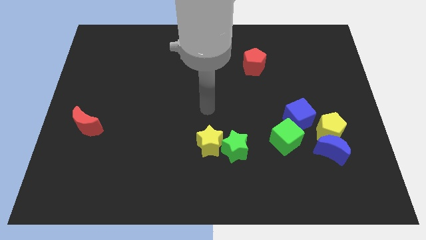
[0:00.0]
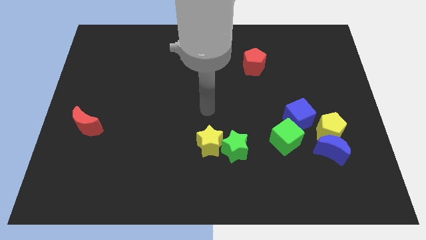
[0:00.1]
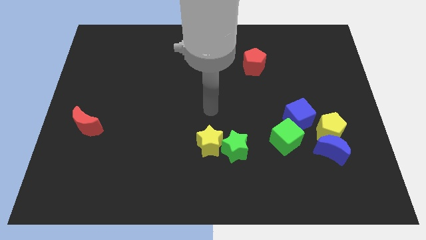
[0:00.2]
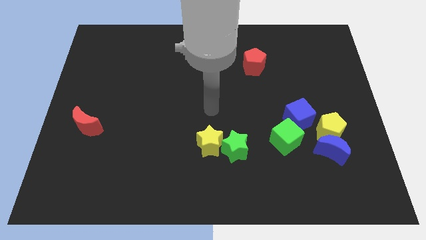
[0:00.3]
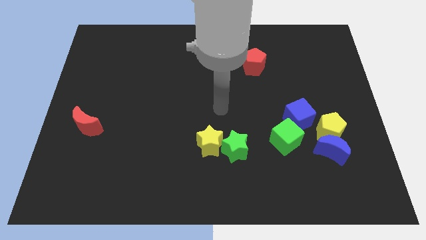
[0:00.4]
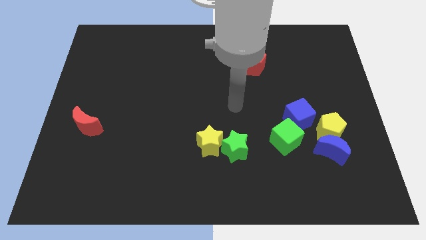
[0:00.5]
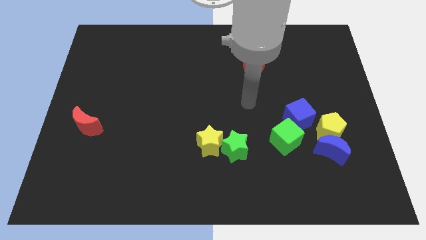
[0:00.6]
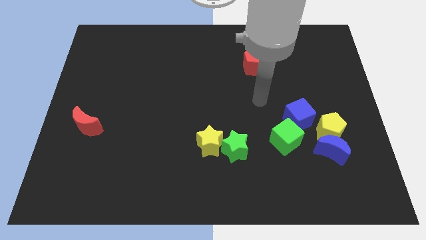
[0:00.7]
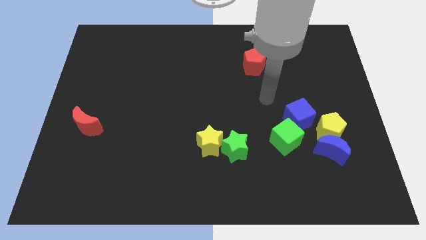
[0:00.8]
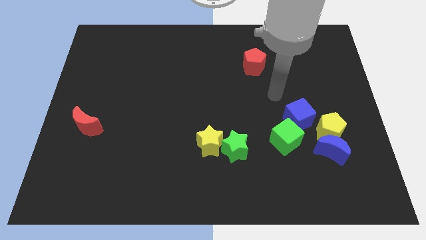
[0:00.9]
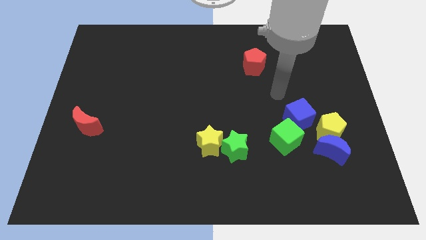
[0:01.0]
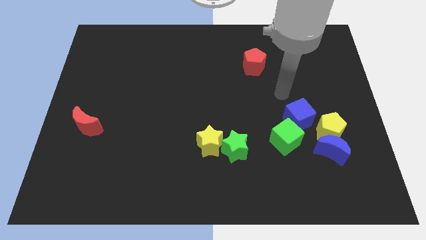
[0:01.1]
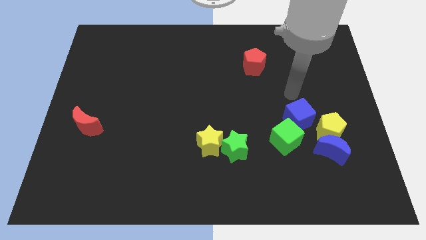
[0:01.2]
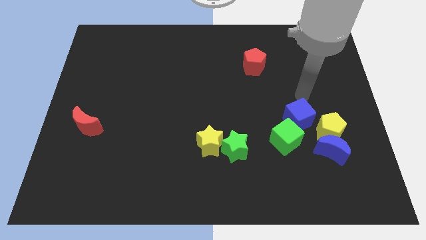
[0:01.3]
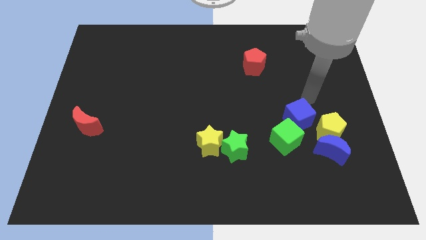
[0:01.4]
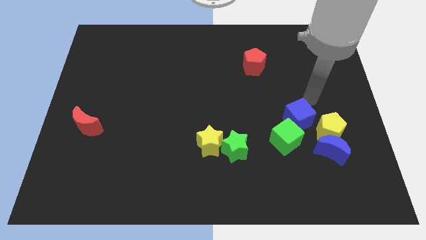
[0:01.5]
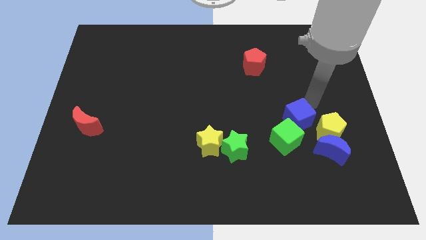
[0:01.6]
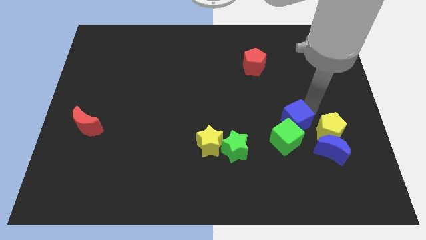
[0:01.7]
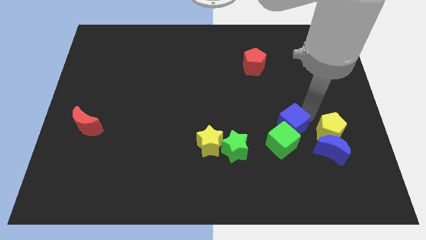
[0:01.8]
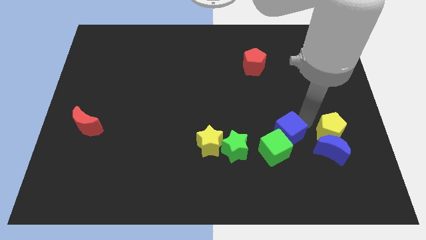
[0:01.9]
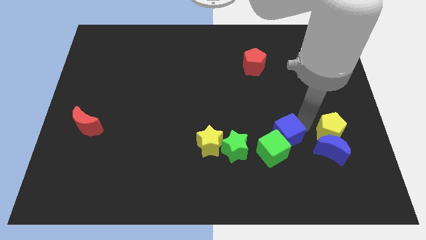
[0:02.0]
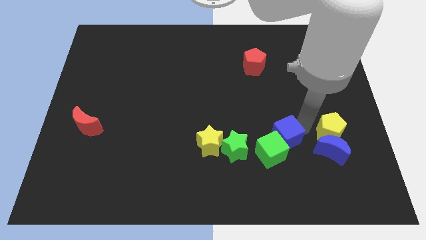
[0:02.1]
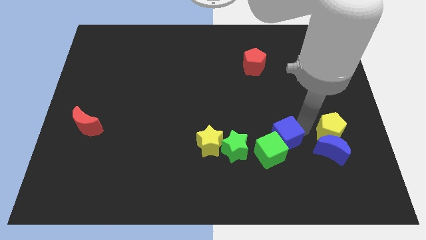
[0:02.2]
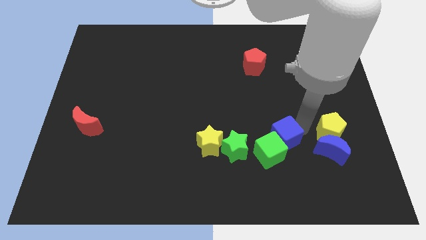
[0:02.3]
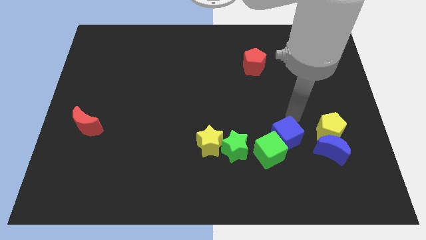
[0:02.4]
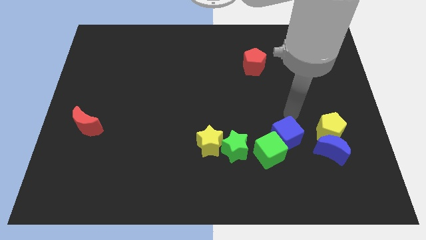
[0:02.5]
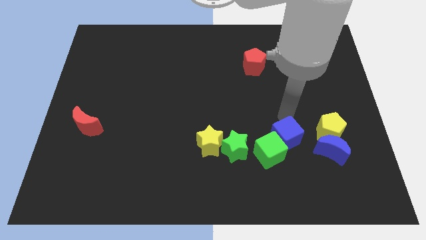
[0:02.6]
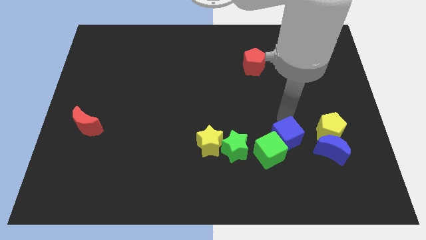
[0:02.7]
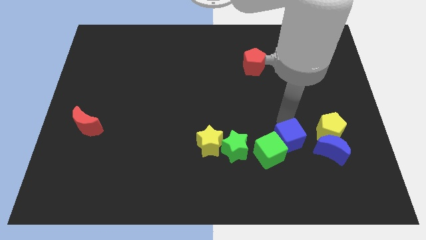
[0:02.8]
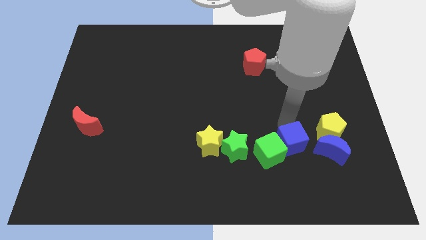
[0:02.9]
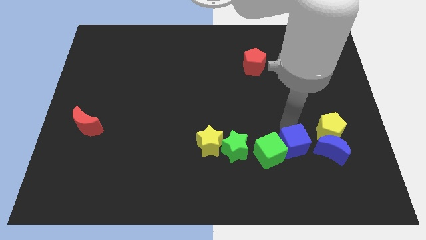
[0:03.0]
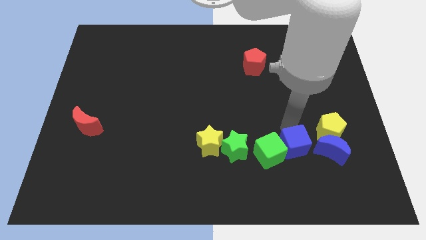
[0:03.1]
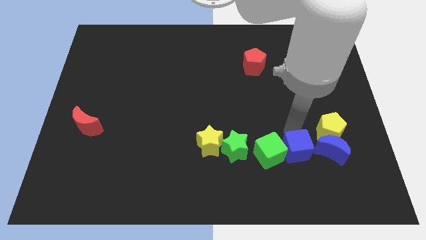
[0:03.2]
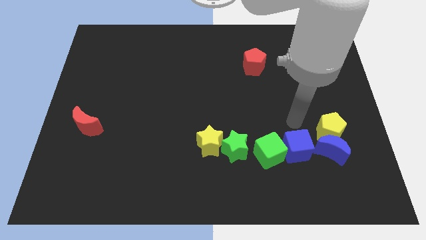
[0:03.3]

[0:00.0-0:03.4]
push the blue cube along with green cube towards the bottom center

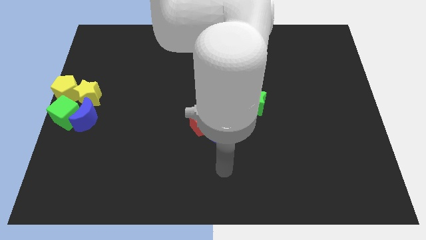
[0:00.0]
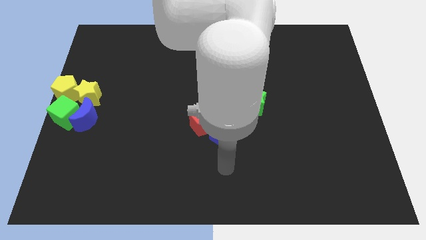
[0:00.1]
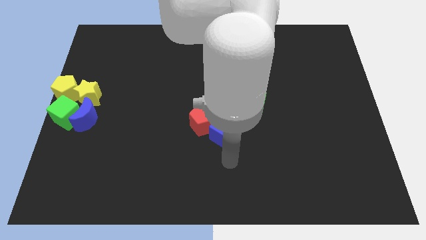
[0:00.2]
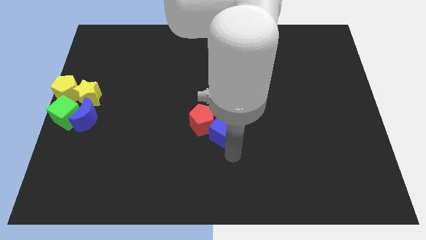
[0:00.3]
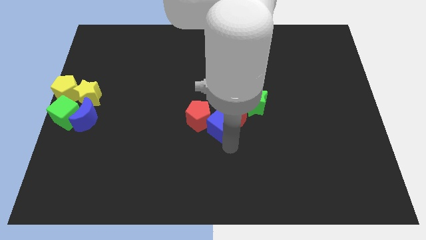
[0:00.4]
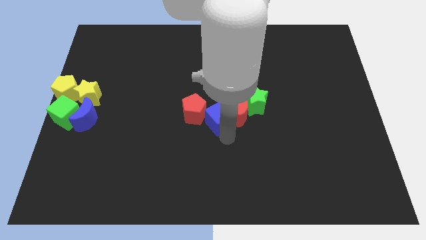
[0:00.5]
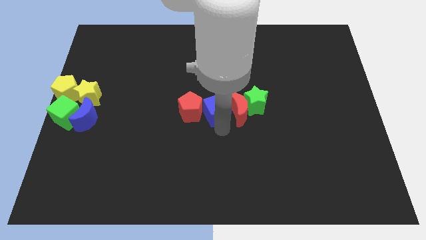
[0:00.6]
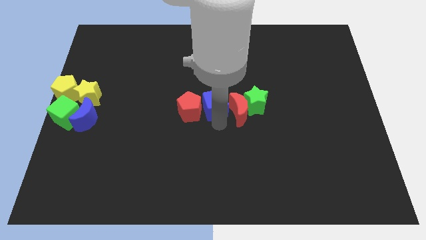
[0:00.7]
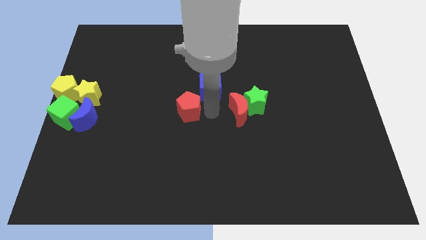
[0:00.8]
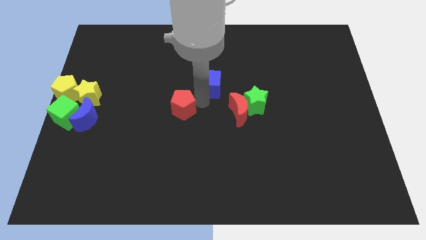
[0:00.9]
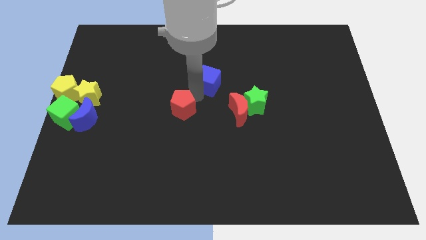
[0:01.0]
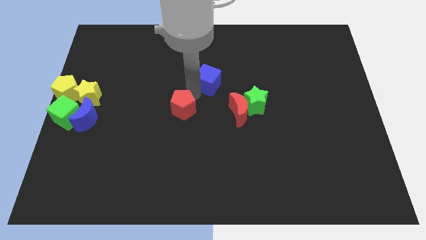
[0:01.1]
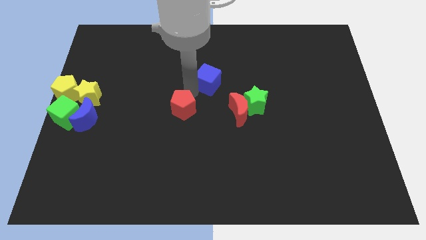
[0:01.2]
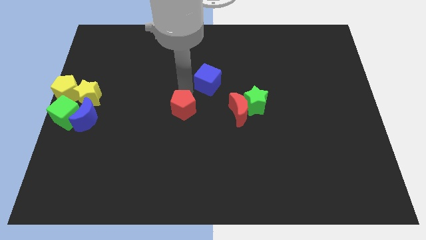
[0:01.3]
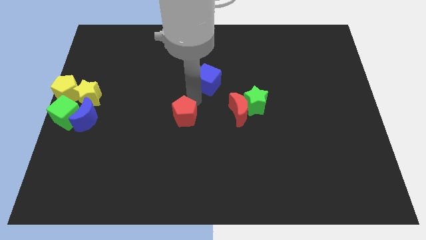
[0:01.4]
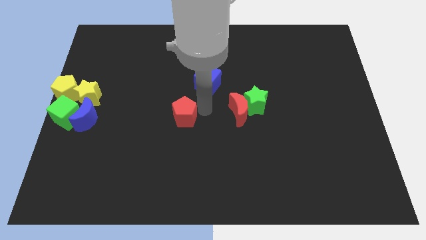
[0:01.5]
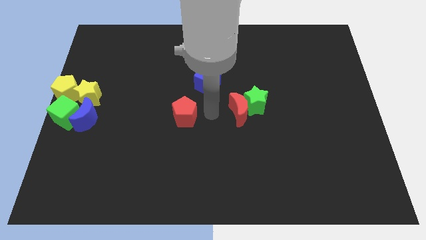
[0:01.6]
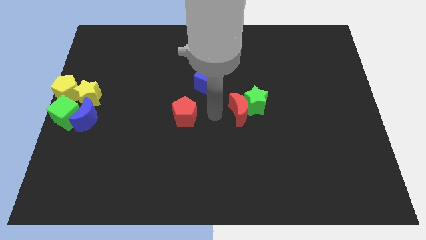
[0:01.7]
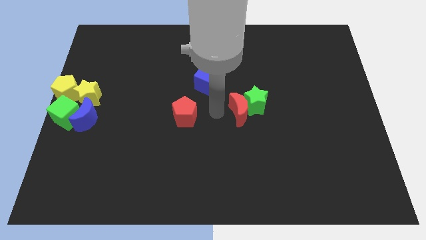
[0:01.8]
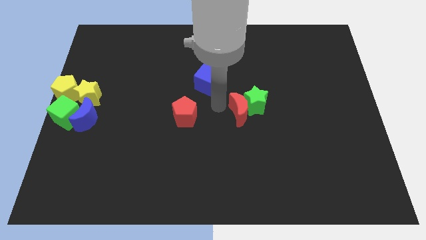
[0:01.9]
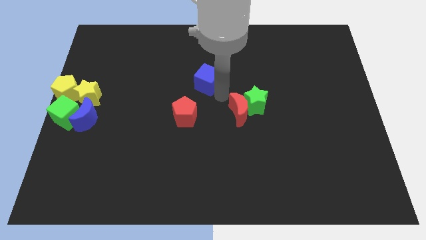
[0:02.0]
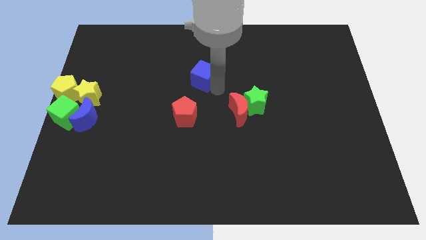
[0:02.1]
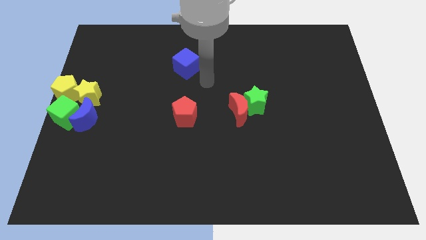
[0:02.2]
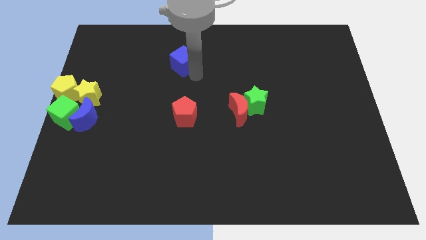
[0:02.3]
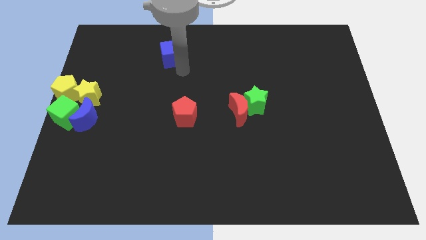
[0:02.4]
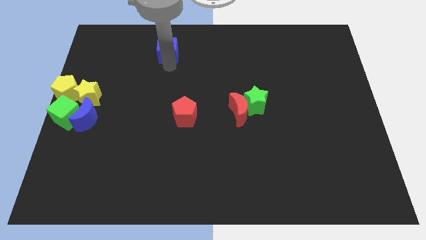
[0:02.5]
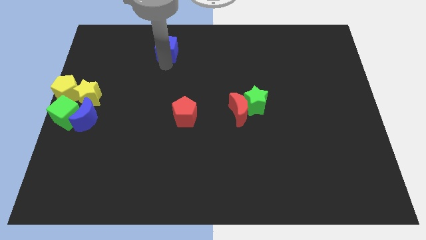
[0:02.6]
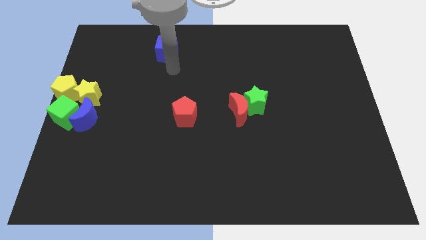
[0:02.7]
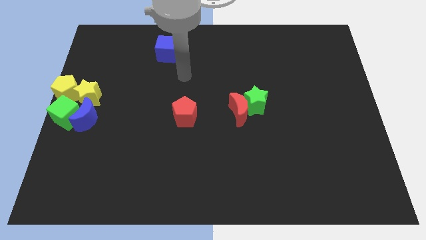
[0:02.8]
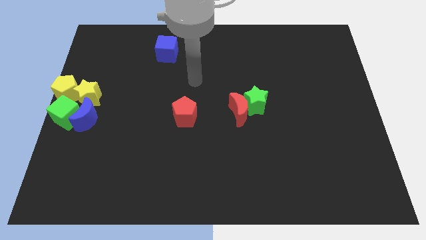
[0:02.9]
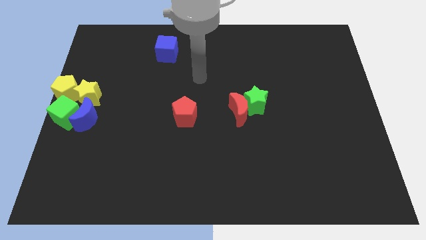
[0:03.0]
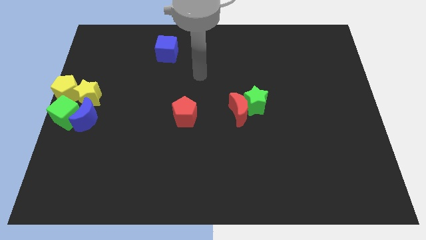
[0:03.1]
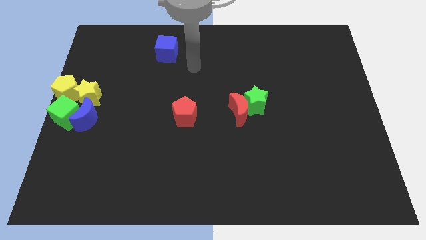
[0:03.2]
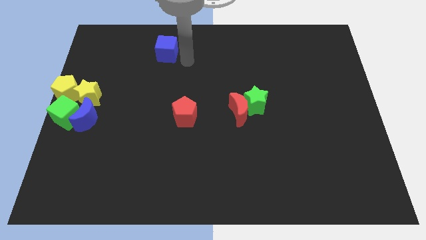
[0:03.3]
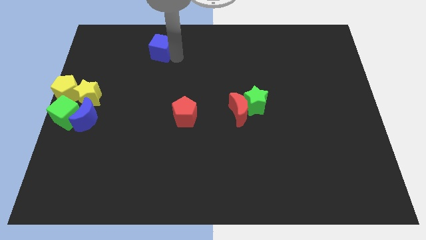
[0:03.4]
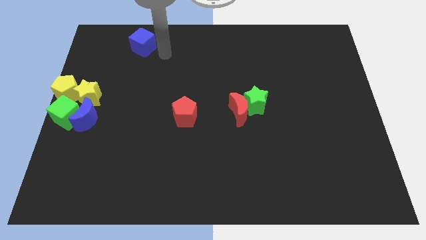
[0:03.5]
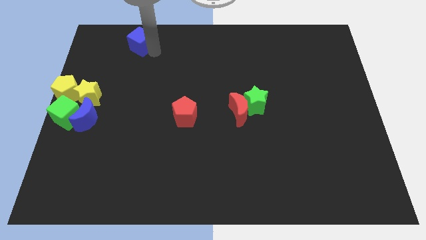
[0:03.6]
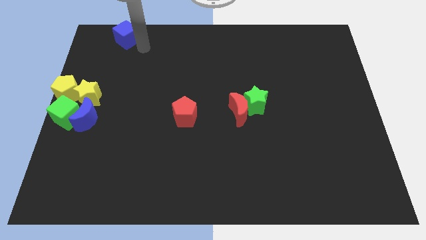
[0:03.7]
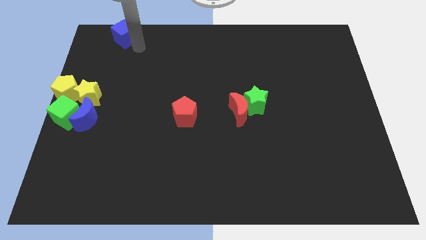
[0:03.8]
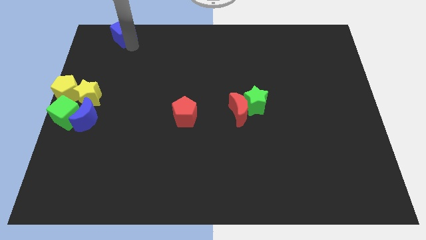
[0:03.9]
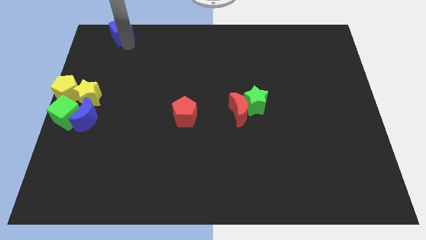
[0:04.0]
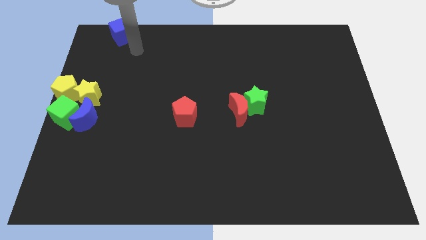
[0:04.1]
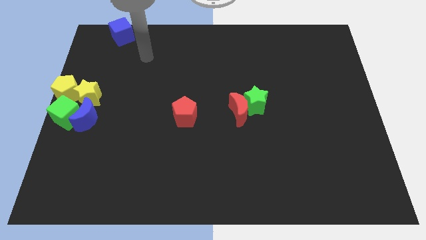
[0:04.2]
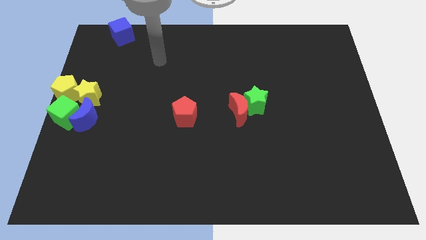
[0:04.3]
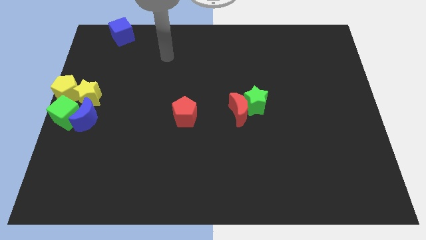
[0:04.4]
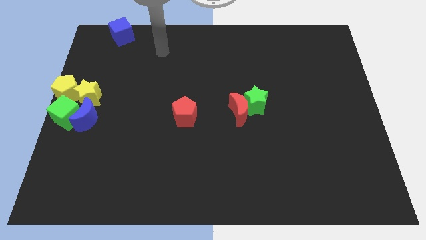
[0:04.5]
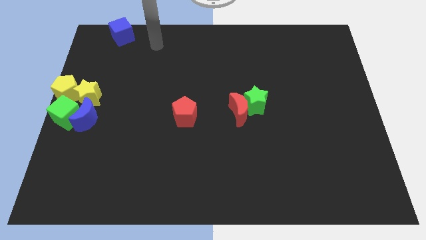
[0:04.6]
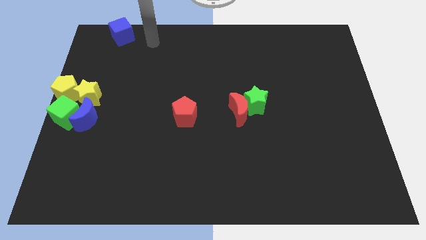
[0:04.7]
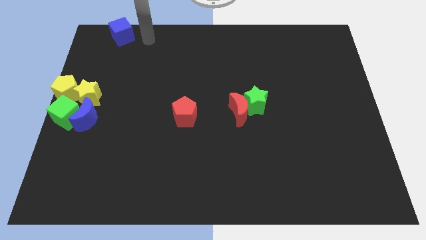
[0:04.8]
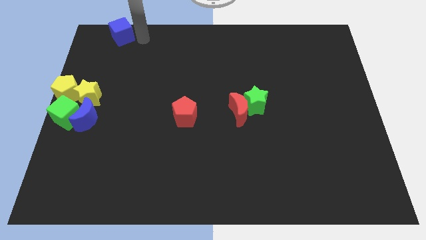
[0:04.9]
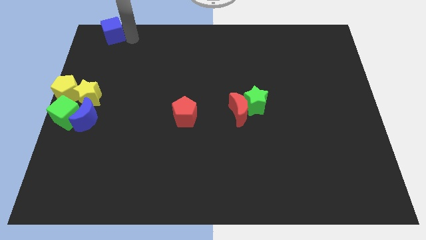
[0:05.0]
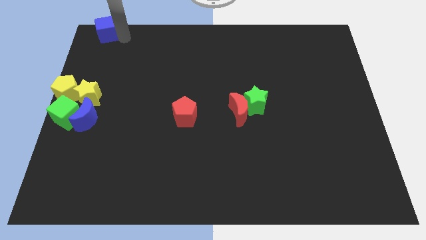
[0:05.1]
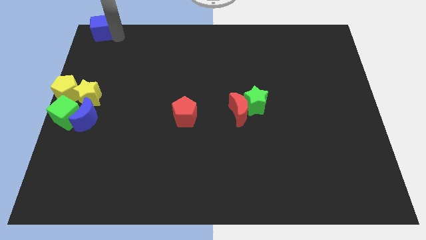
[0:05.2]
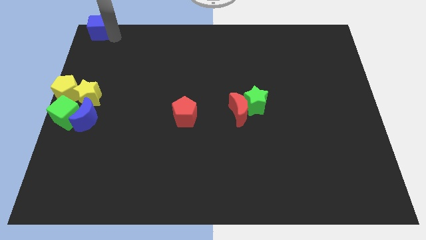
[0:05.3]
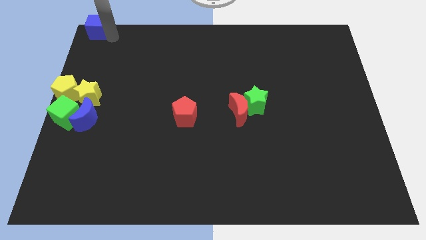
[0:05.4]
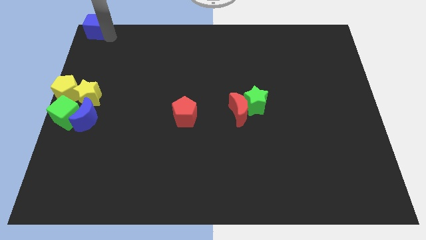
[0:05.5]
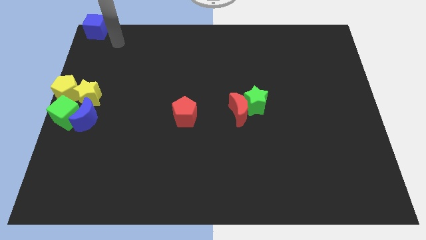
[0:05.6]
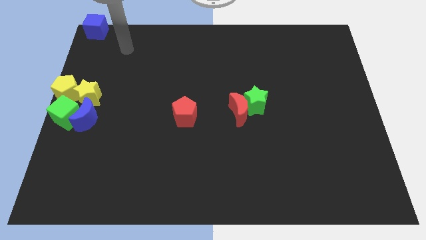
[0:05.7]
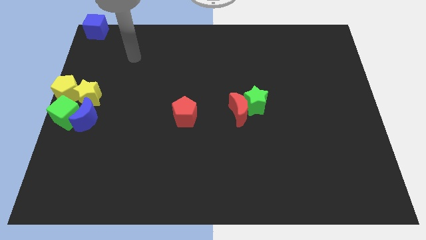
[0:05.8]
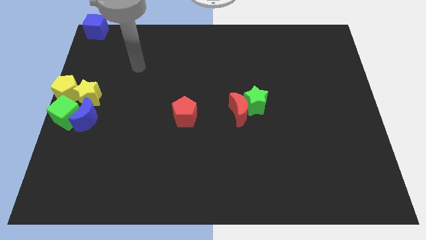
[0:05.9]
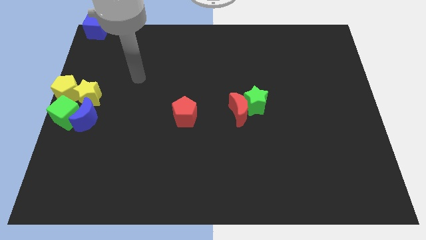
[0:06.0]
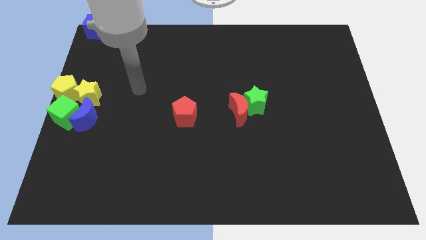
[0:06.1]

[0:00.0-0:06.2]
move the blue cube to the top left corner of the board
